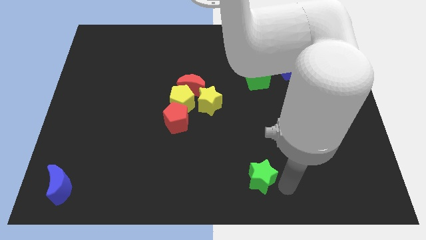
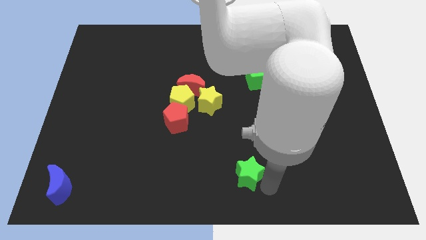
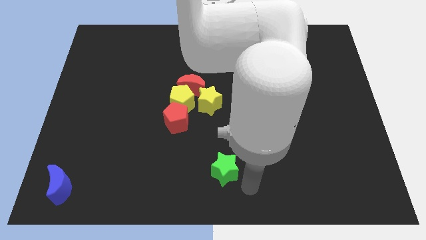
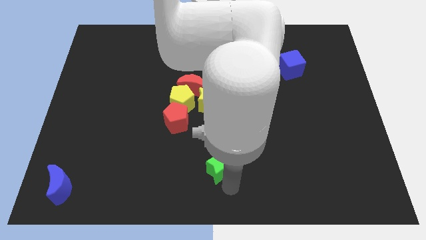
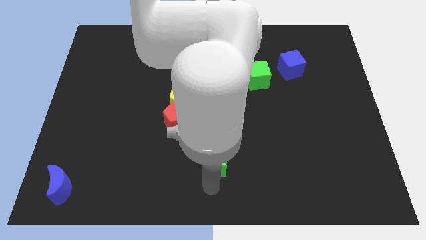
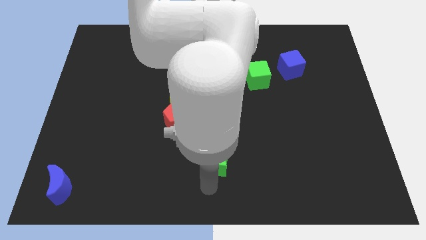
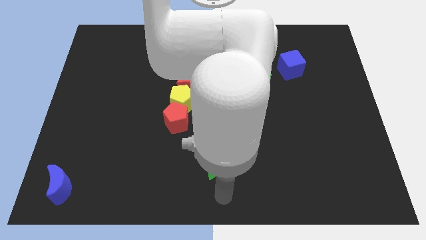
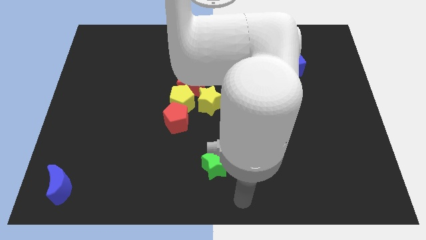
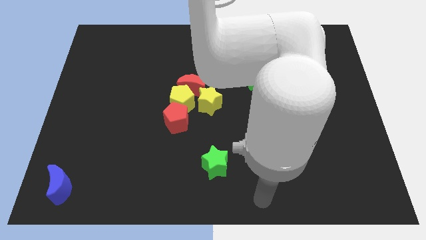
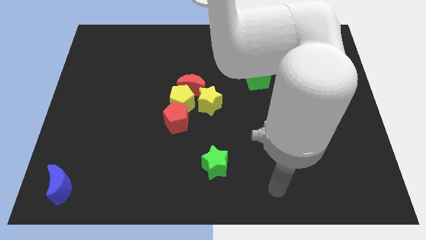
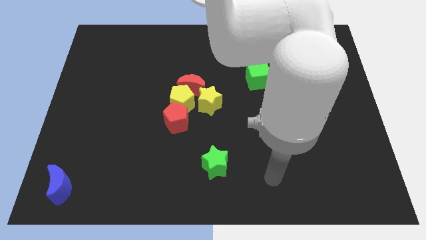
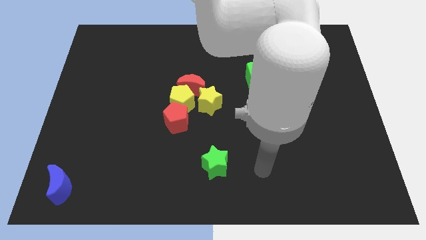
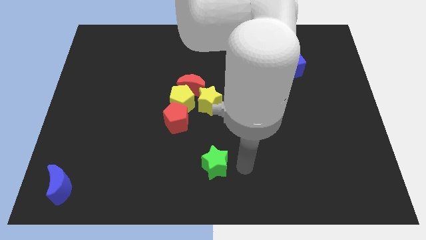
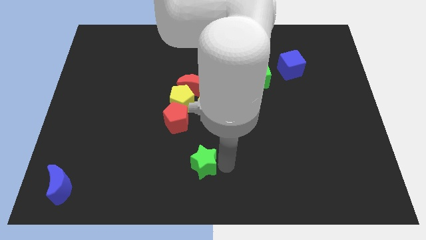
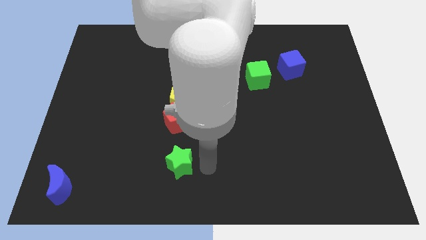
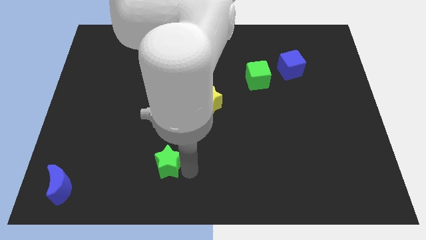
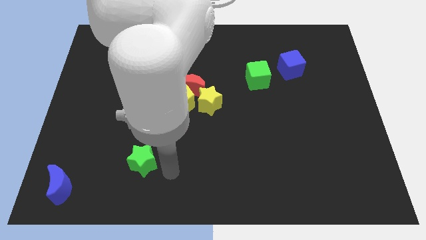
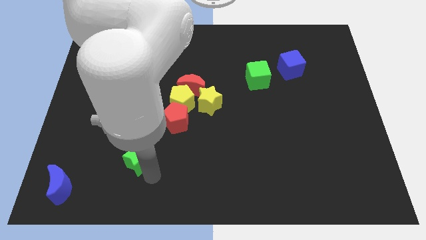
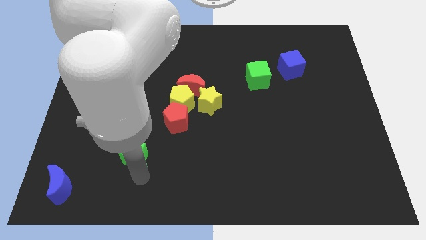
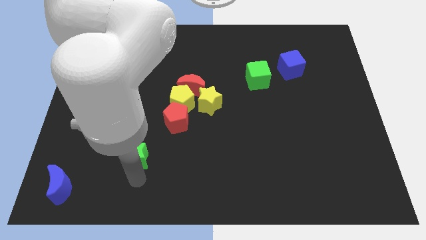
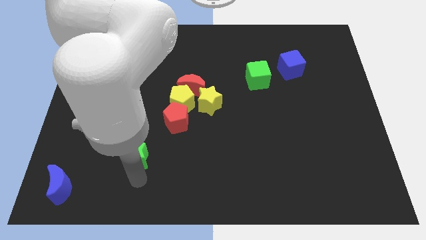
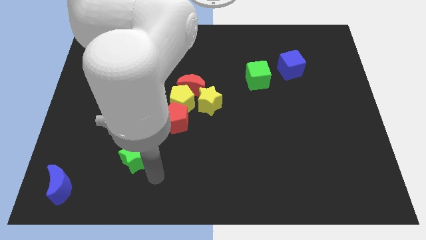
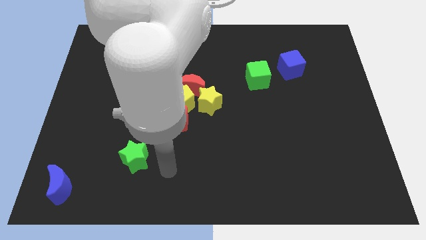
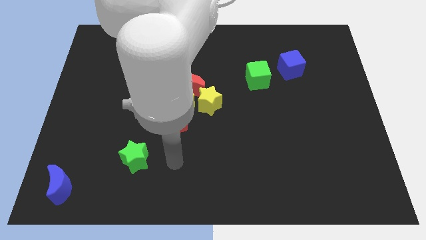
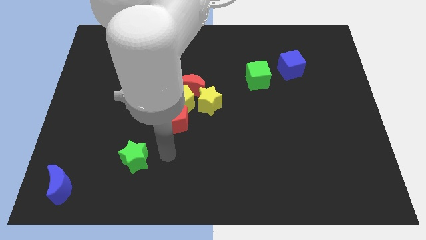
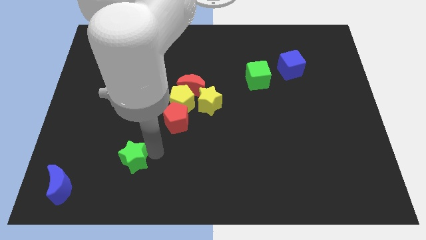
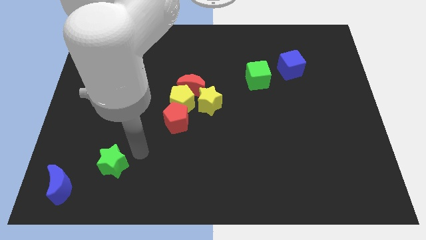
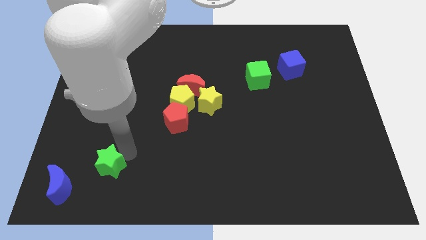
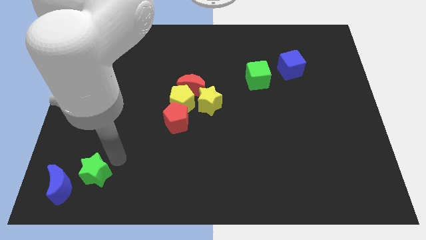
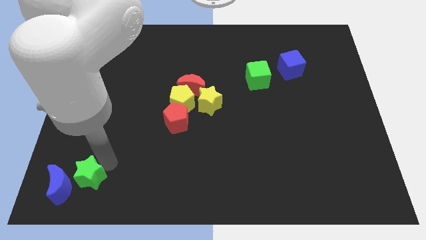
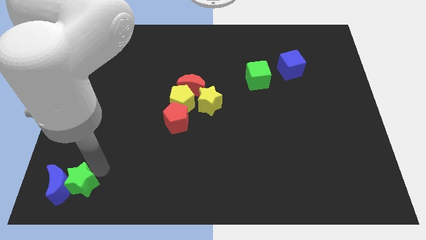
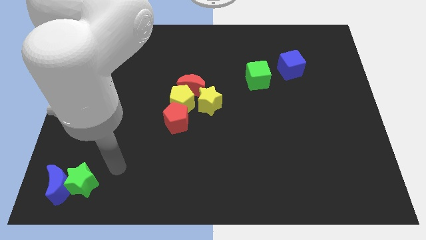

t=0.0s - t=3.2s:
move the green star at the right side of the blue crescent

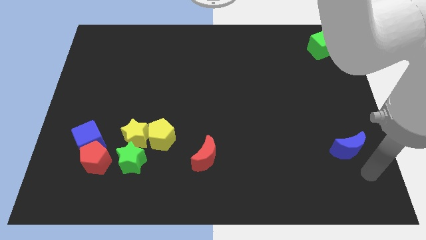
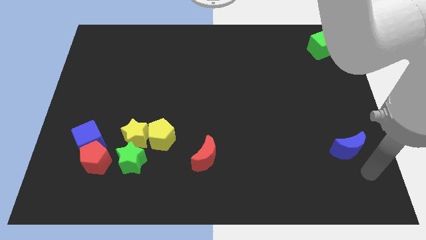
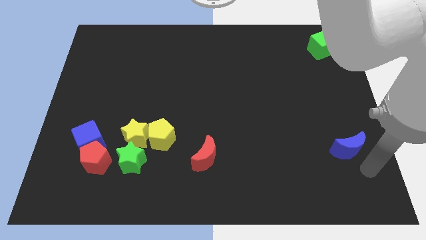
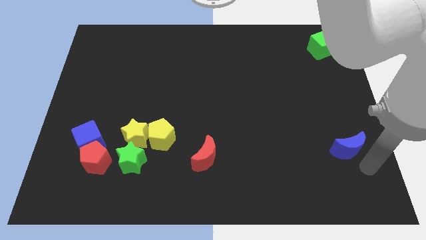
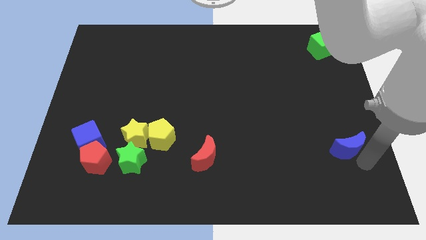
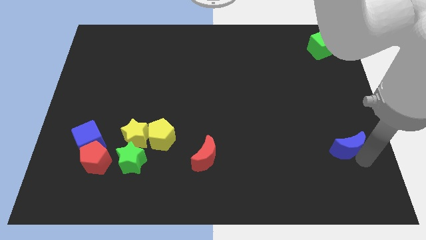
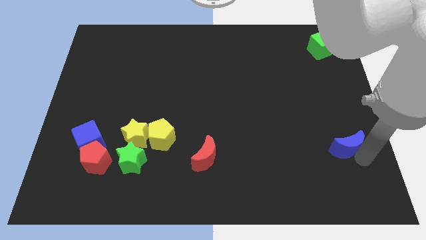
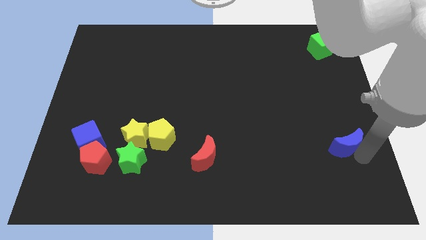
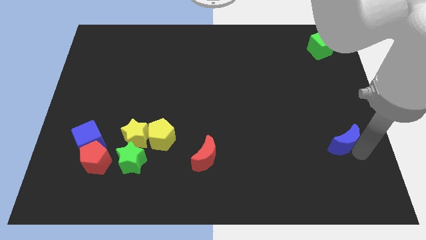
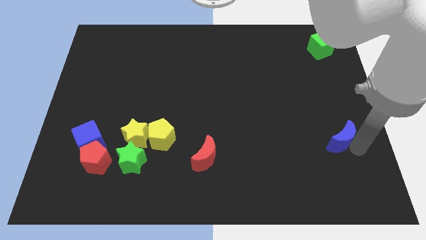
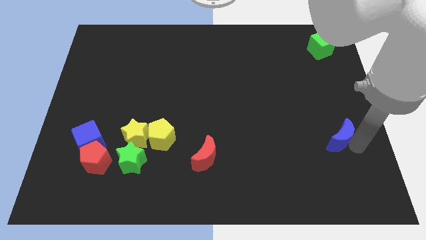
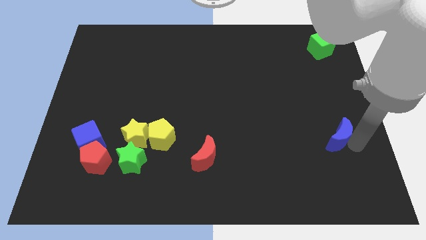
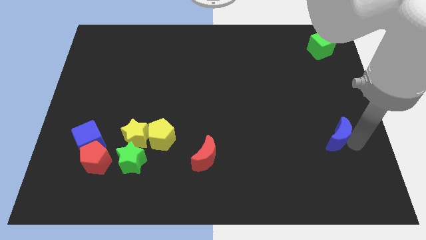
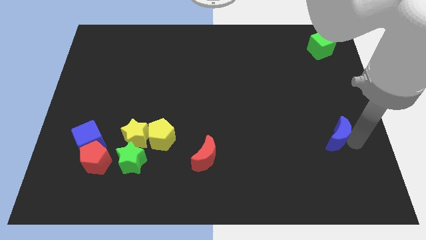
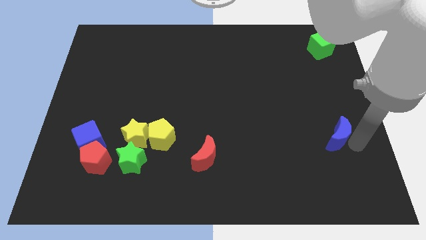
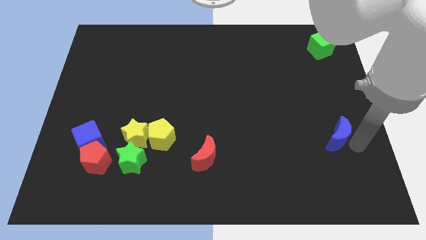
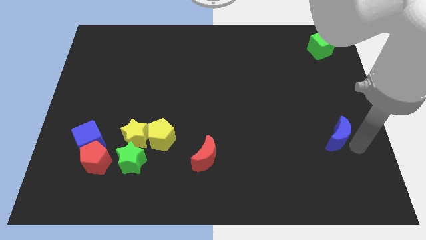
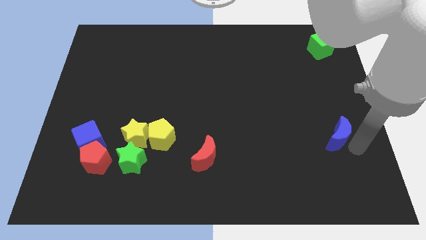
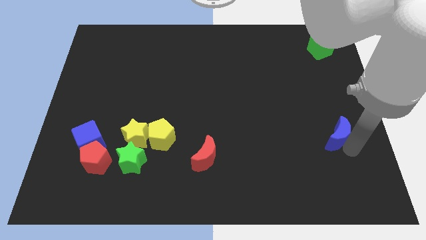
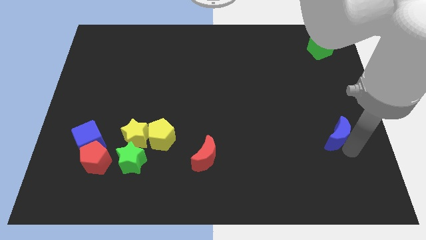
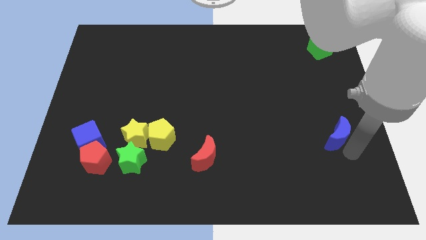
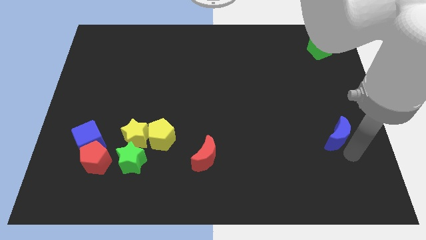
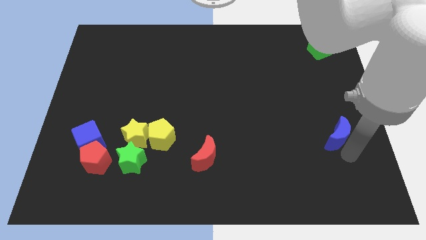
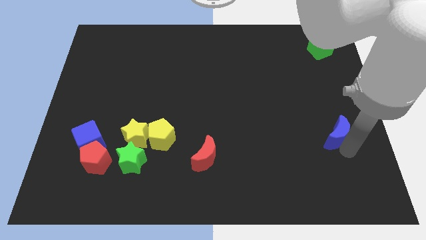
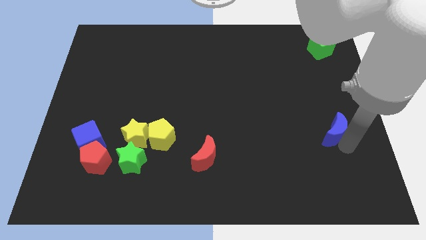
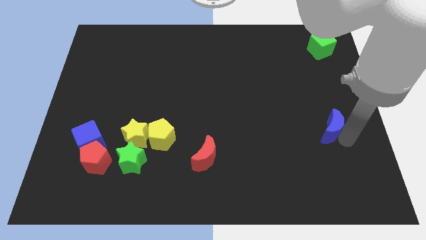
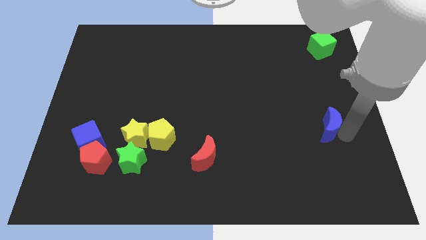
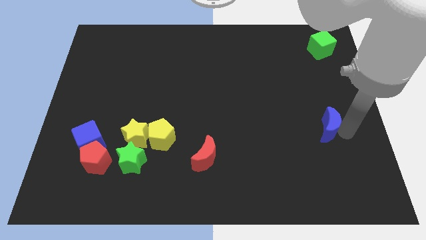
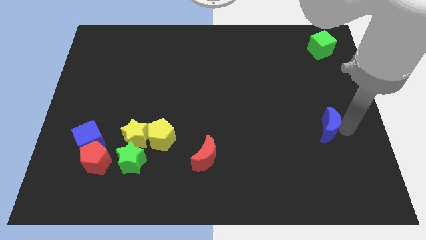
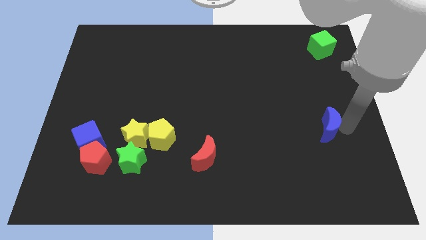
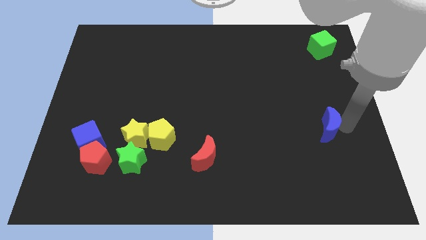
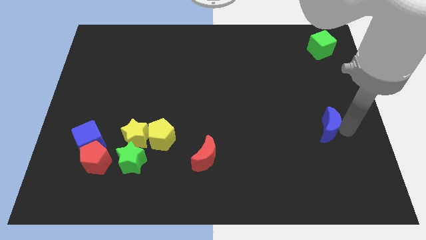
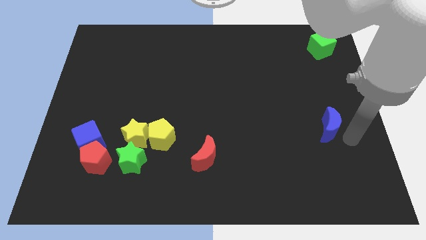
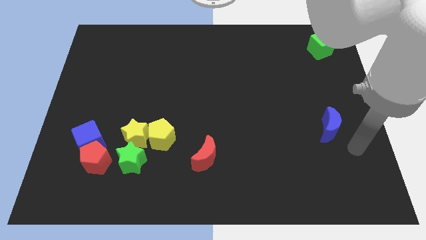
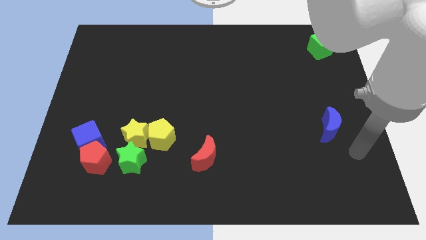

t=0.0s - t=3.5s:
push the blue moon towards top

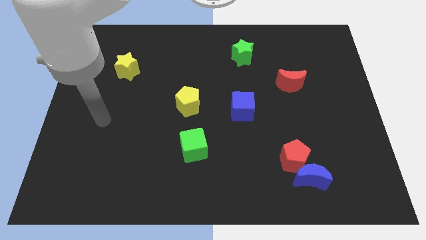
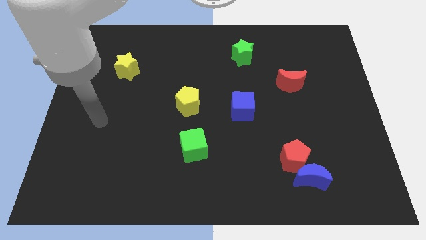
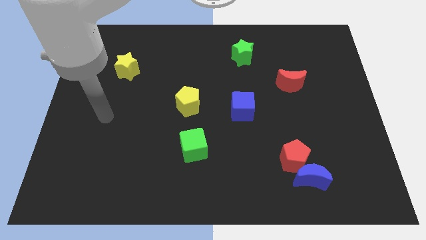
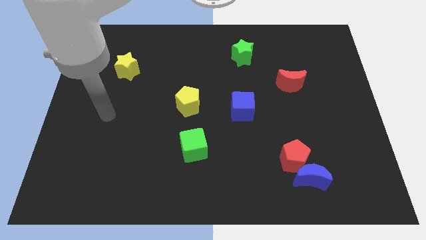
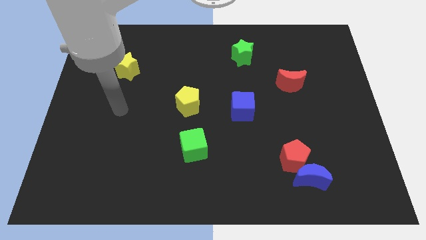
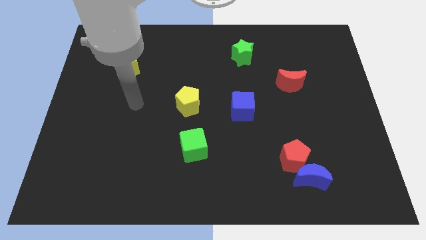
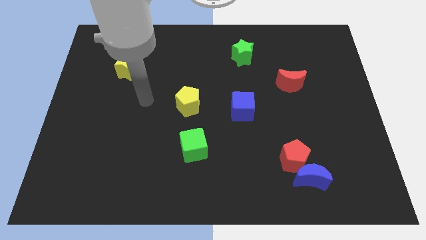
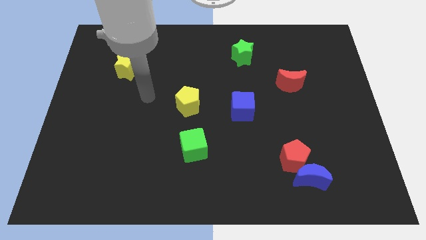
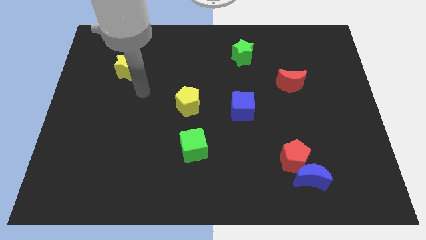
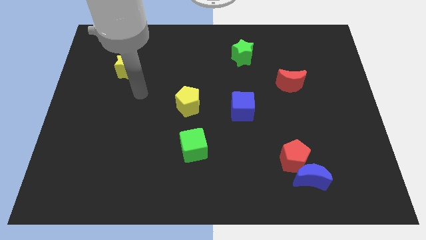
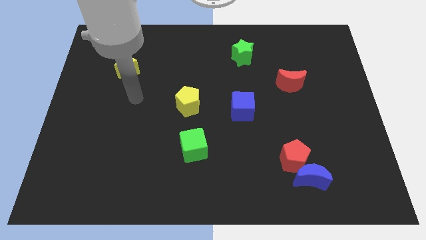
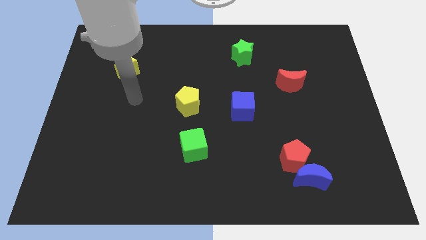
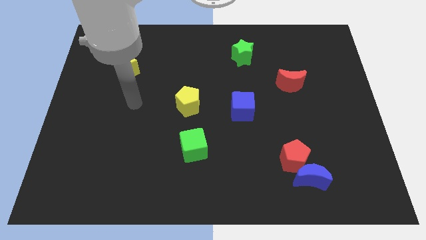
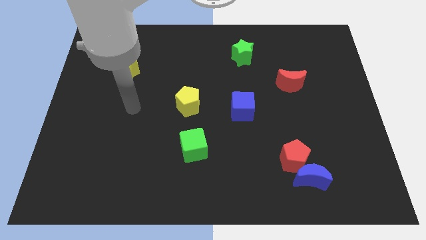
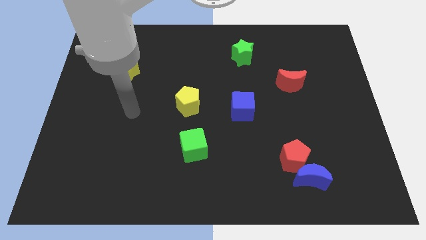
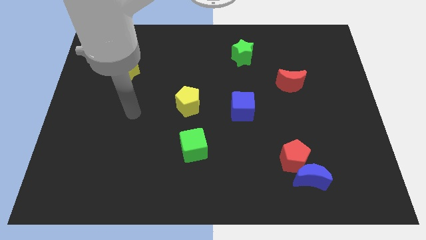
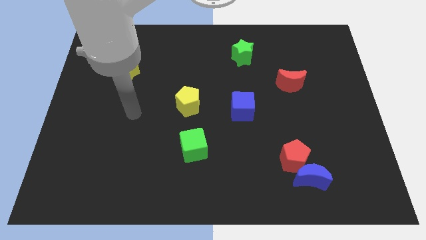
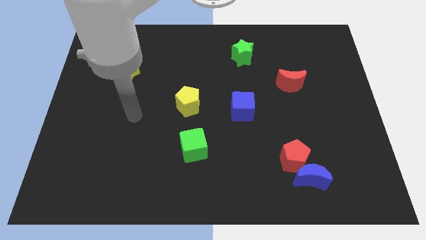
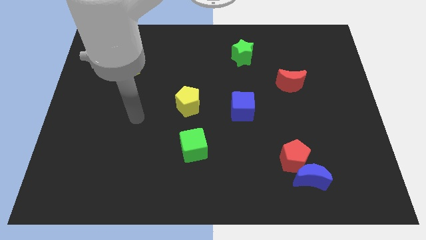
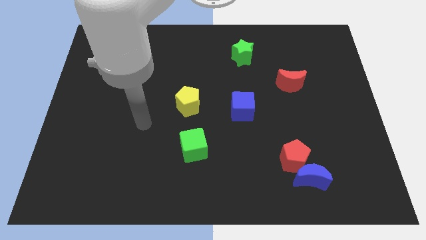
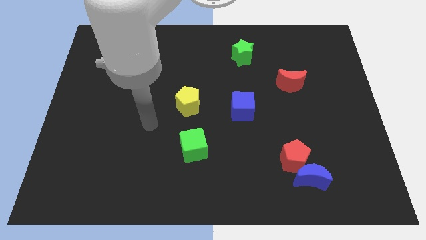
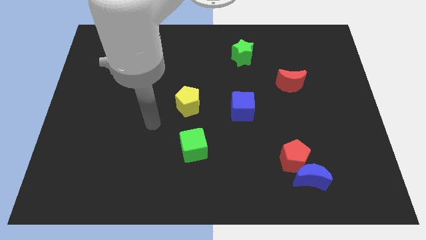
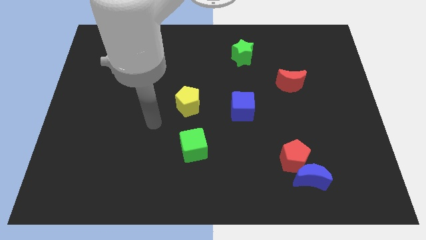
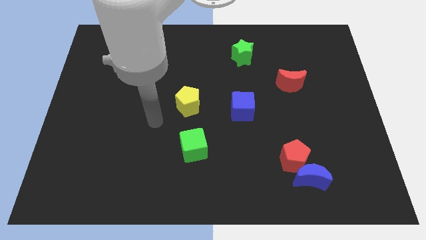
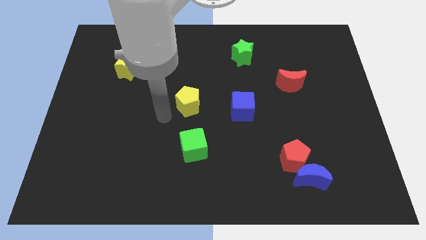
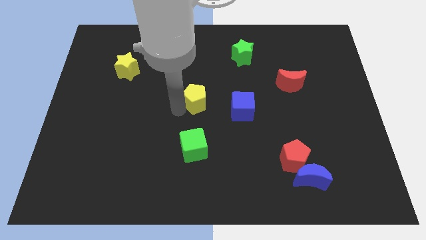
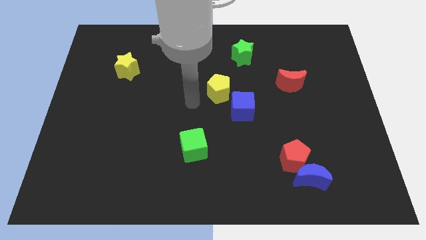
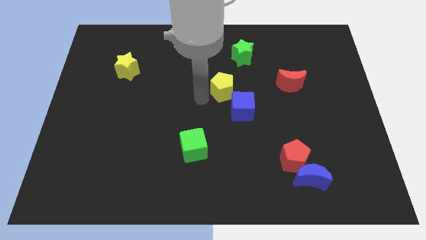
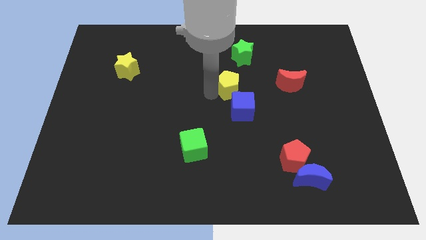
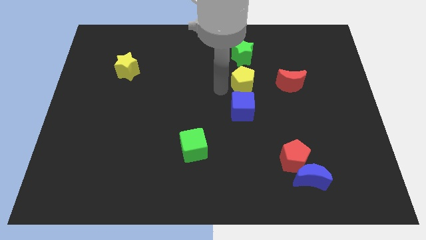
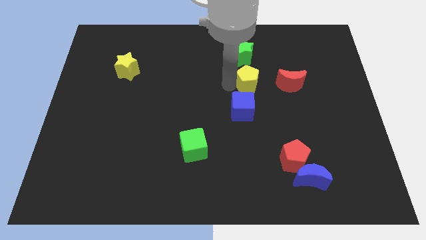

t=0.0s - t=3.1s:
place the yellow pentagon to top right side of the blue cube
